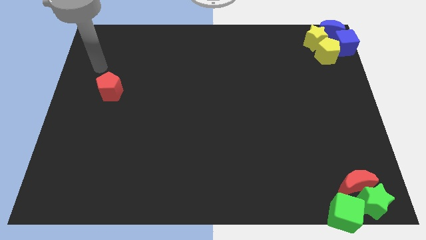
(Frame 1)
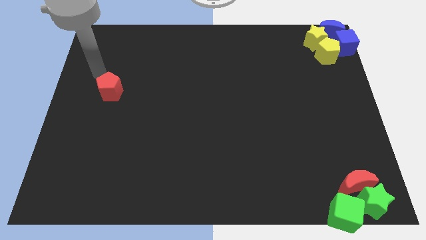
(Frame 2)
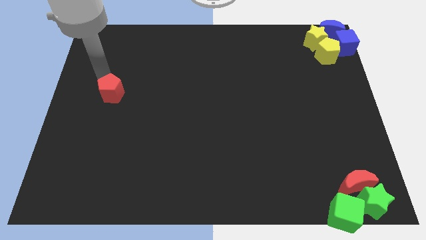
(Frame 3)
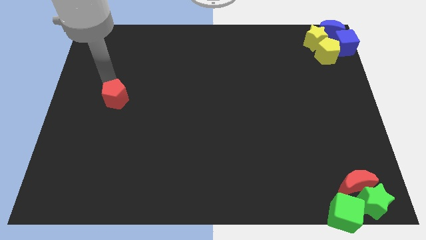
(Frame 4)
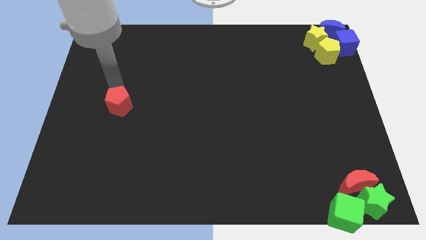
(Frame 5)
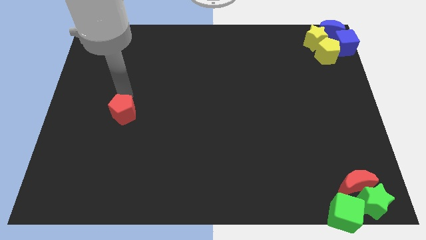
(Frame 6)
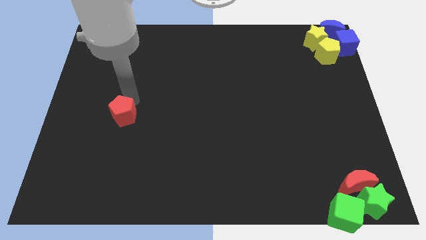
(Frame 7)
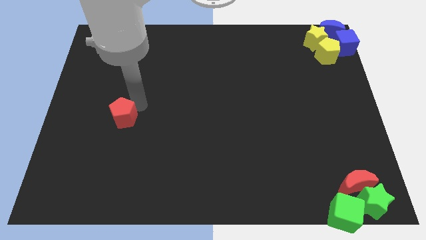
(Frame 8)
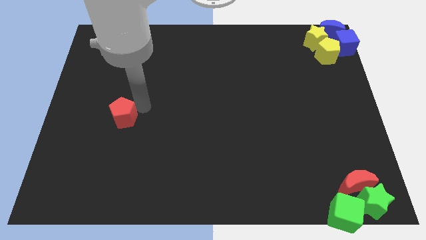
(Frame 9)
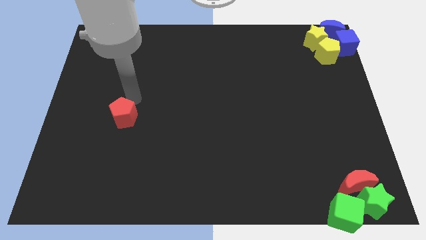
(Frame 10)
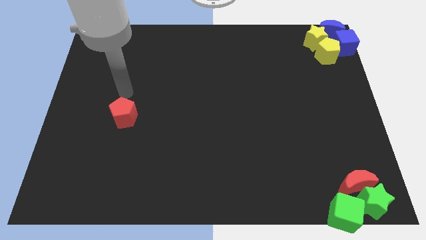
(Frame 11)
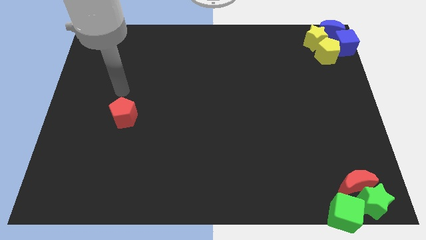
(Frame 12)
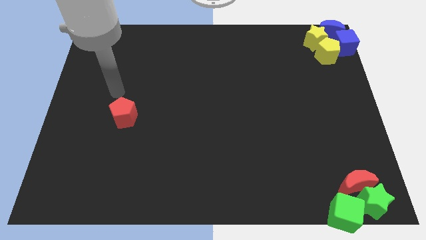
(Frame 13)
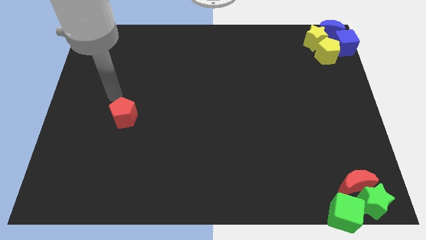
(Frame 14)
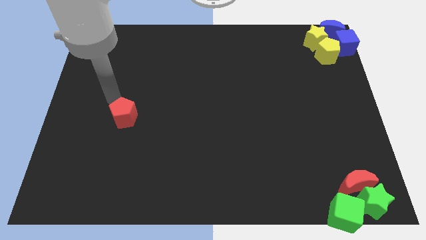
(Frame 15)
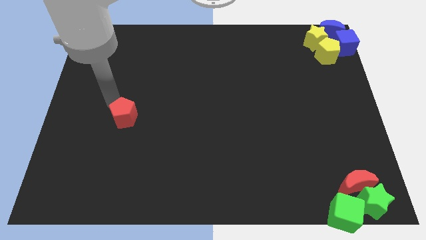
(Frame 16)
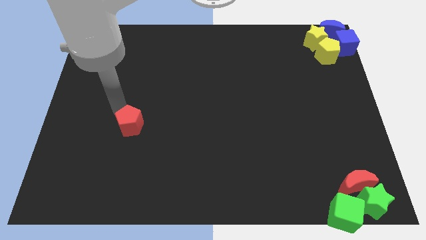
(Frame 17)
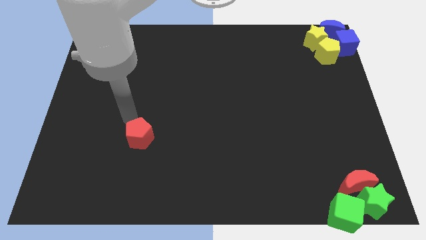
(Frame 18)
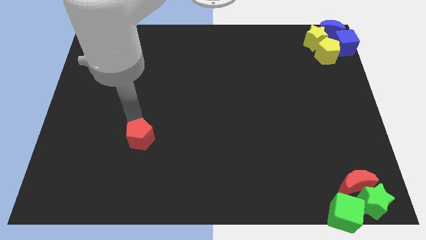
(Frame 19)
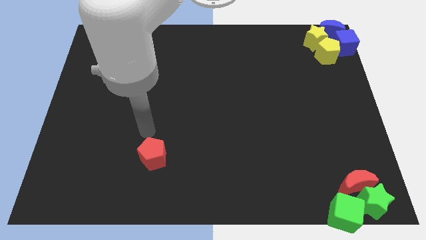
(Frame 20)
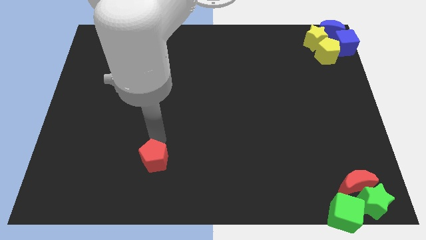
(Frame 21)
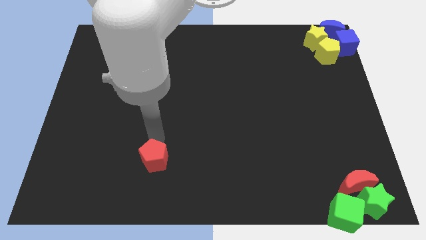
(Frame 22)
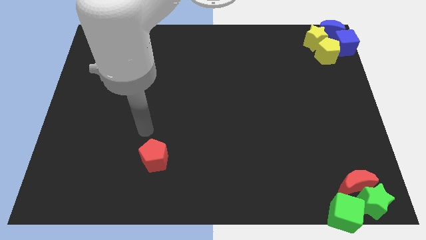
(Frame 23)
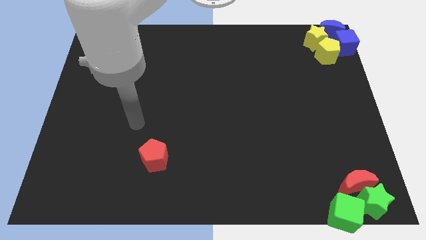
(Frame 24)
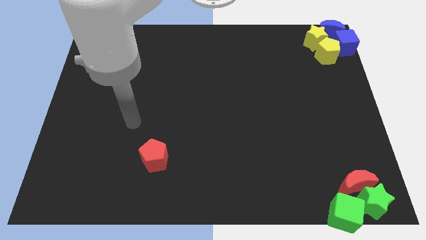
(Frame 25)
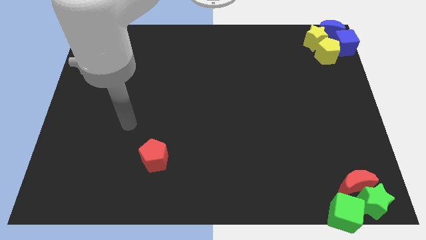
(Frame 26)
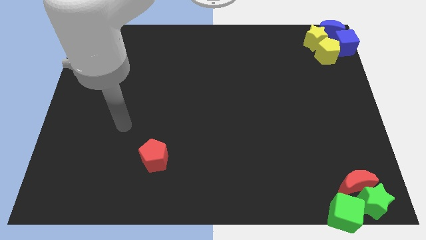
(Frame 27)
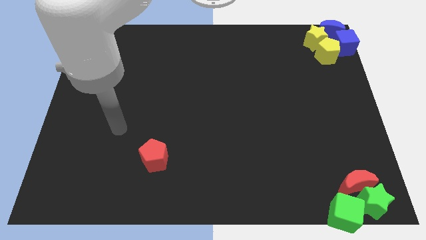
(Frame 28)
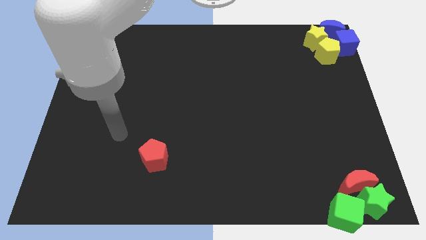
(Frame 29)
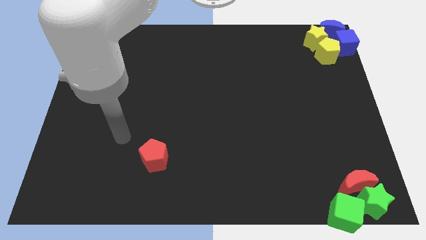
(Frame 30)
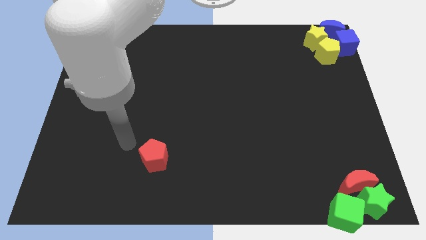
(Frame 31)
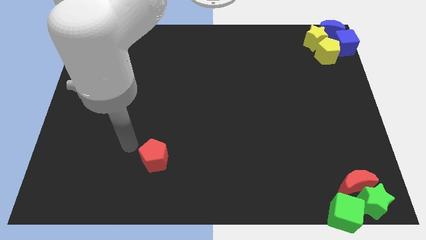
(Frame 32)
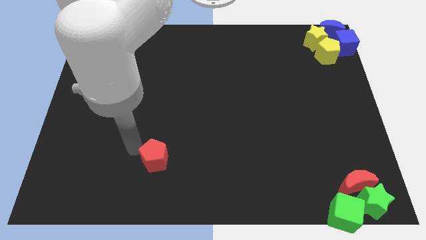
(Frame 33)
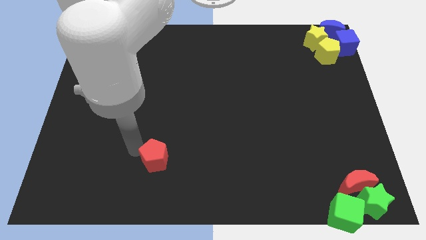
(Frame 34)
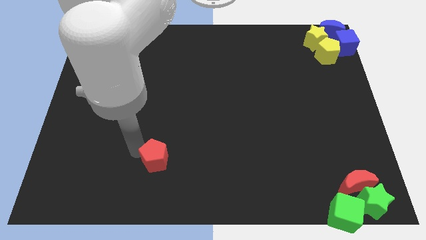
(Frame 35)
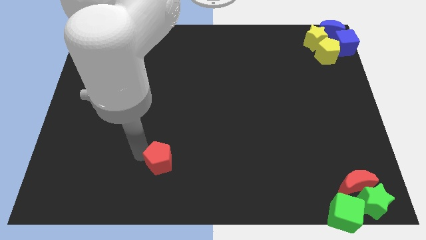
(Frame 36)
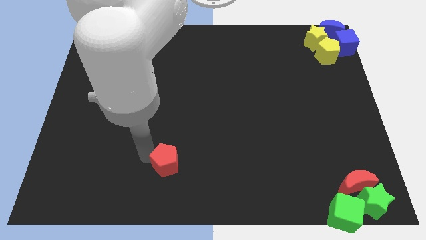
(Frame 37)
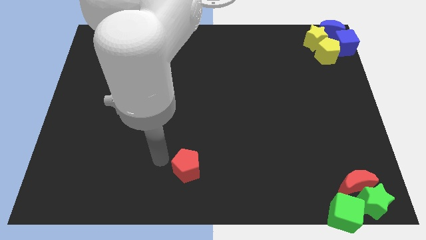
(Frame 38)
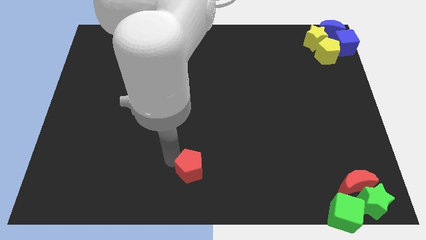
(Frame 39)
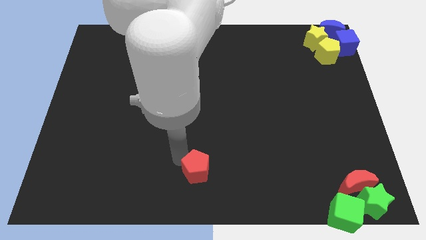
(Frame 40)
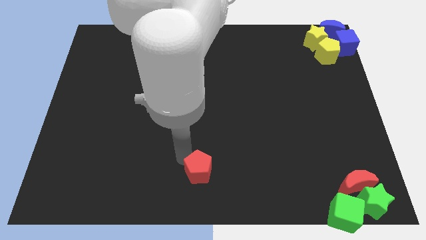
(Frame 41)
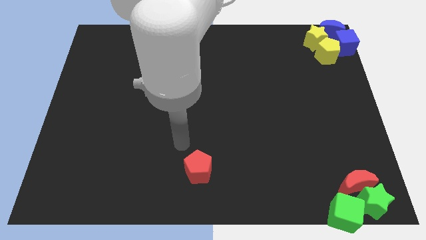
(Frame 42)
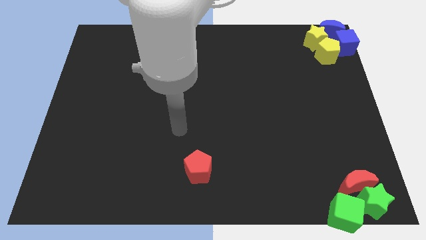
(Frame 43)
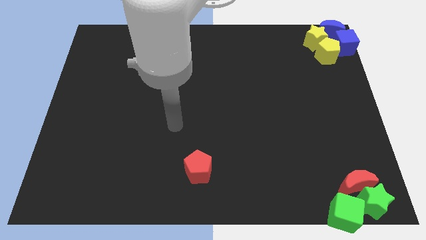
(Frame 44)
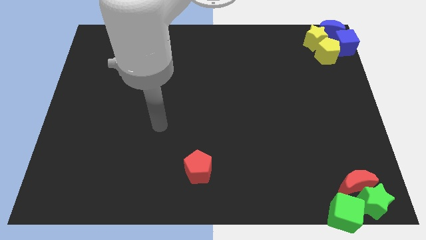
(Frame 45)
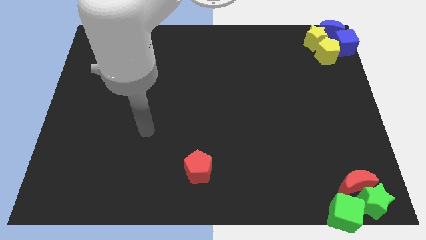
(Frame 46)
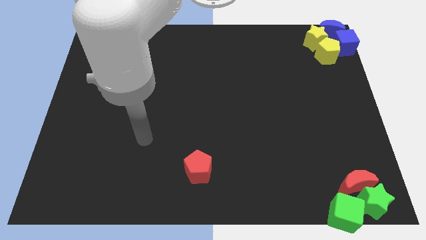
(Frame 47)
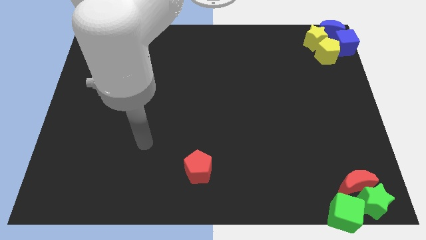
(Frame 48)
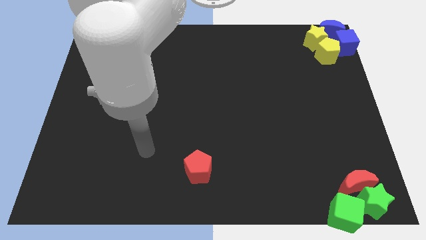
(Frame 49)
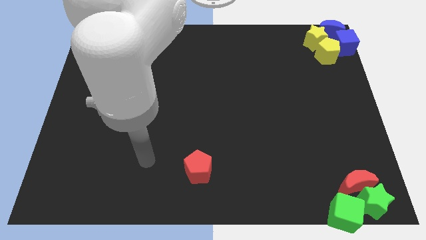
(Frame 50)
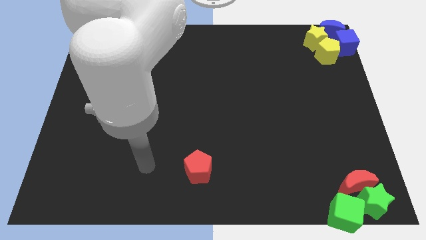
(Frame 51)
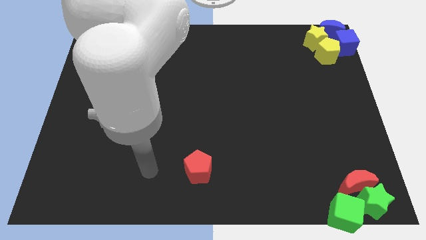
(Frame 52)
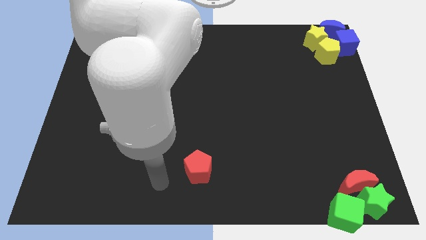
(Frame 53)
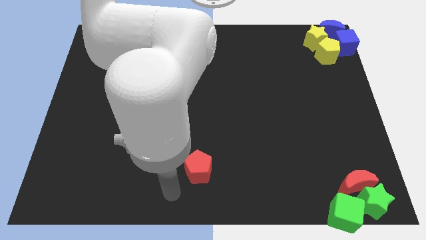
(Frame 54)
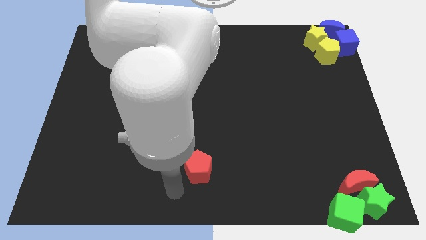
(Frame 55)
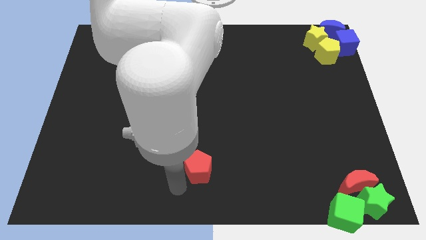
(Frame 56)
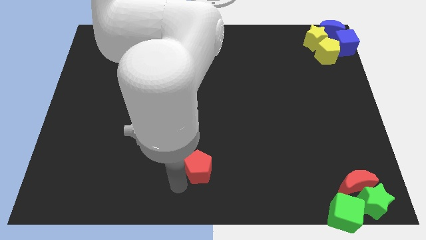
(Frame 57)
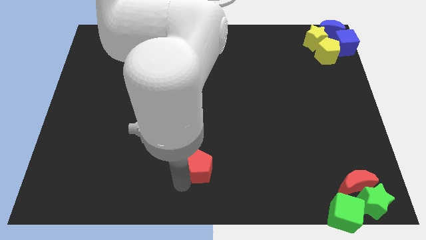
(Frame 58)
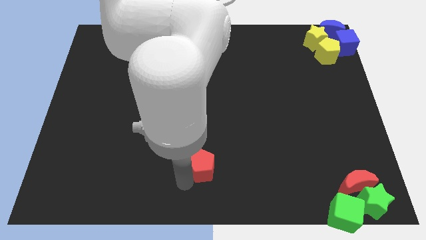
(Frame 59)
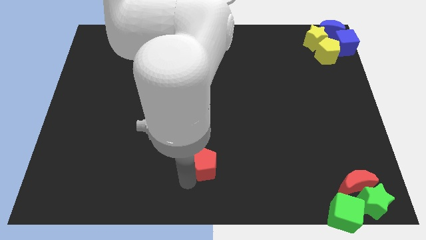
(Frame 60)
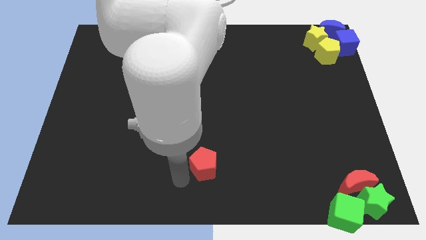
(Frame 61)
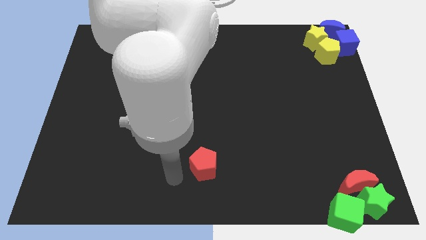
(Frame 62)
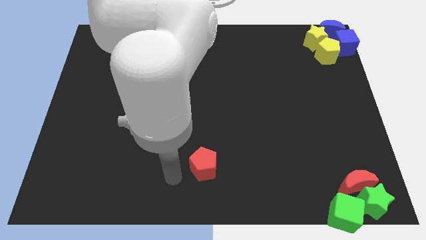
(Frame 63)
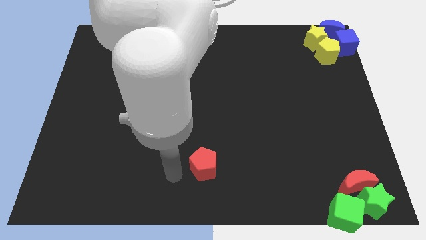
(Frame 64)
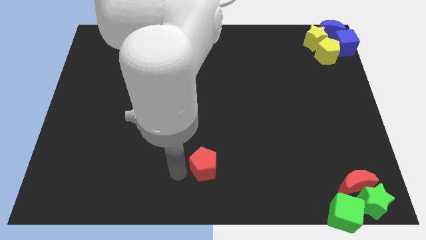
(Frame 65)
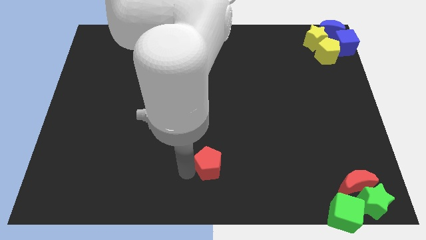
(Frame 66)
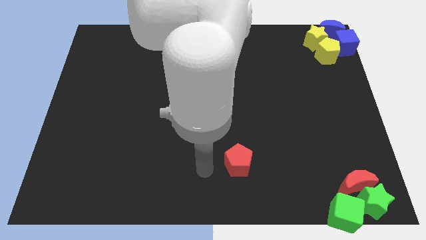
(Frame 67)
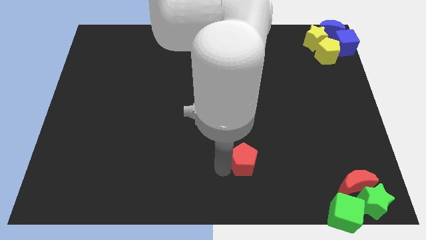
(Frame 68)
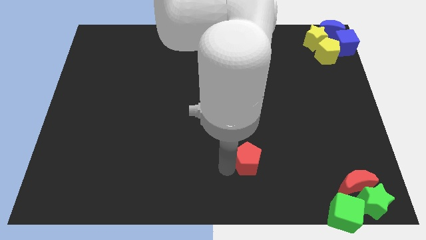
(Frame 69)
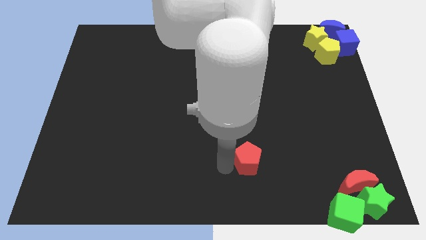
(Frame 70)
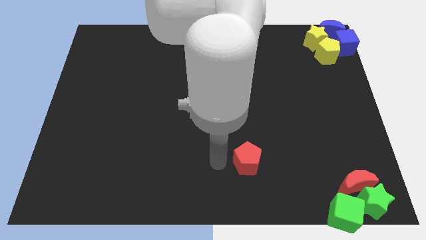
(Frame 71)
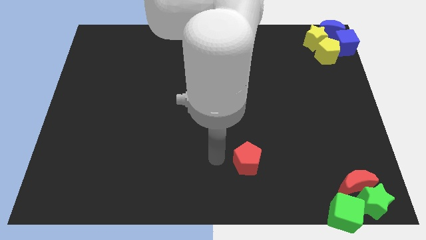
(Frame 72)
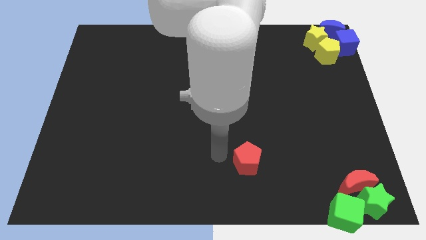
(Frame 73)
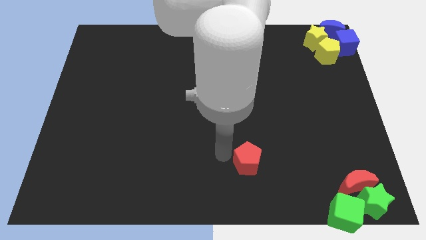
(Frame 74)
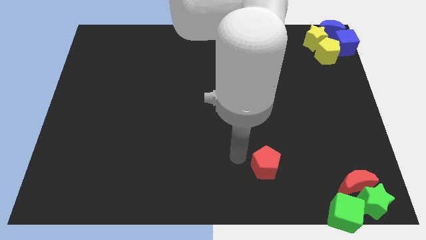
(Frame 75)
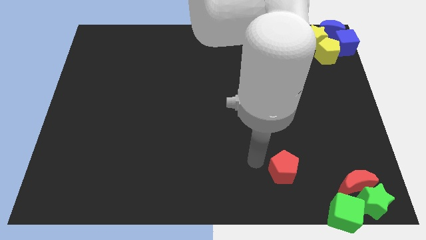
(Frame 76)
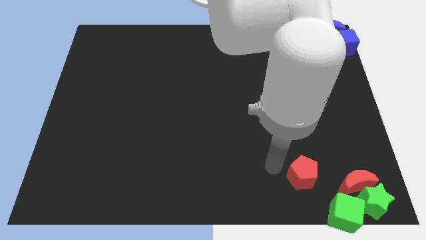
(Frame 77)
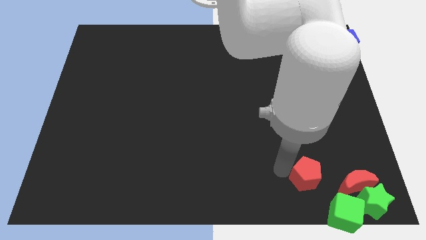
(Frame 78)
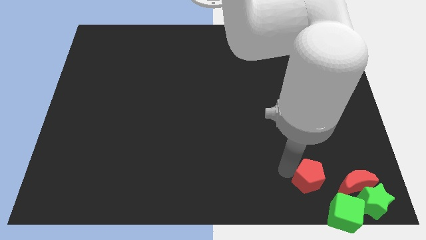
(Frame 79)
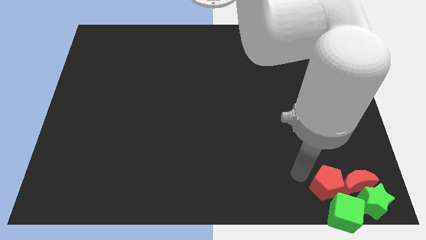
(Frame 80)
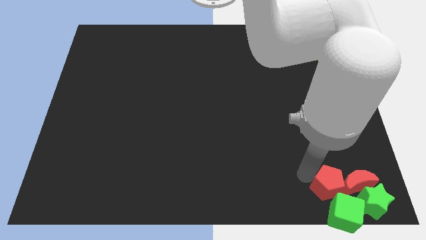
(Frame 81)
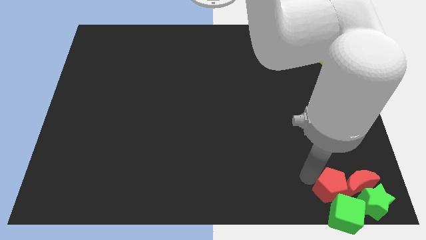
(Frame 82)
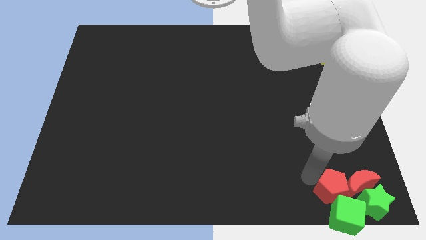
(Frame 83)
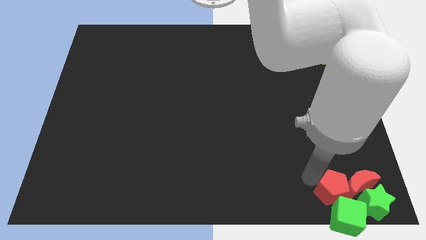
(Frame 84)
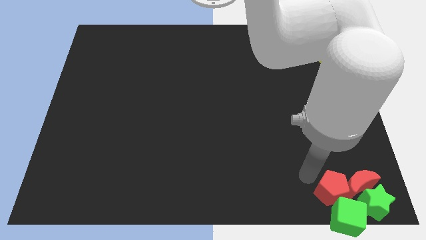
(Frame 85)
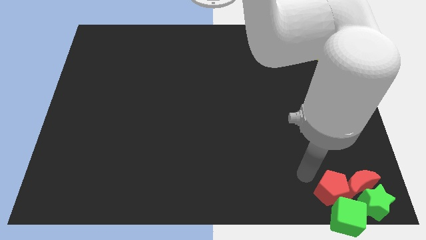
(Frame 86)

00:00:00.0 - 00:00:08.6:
push the red pentagon into the green cube

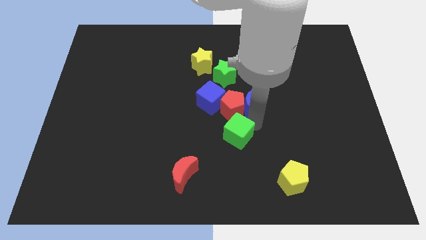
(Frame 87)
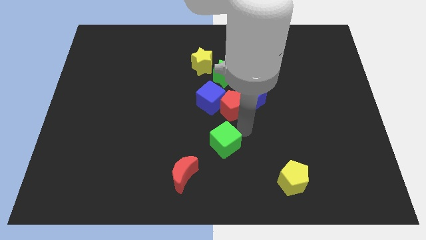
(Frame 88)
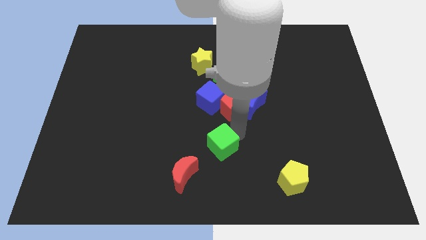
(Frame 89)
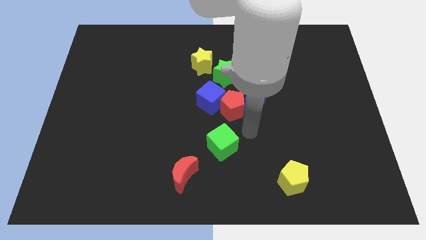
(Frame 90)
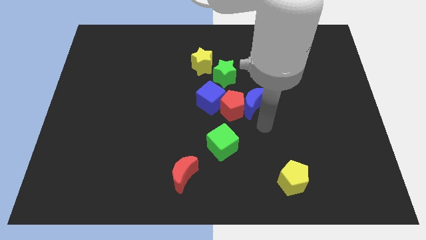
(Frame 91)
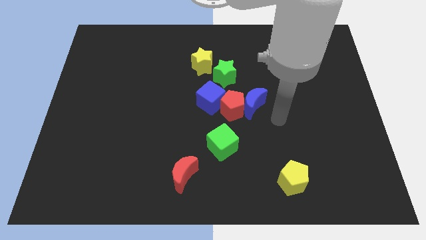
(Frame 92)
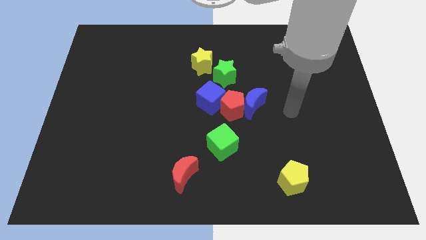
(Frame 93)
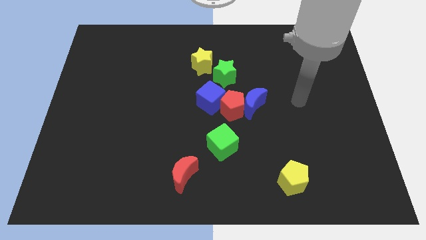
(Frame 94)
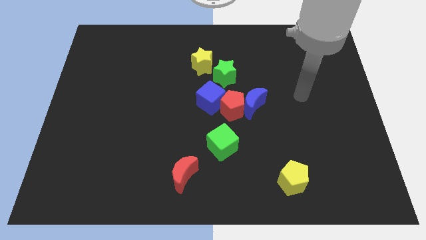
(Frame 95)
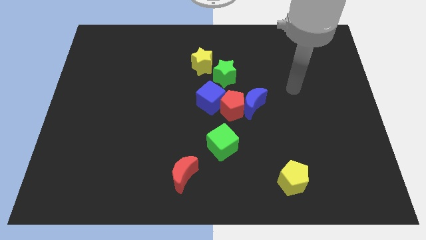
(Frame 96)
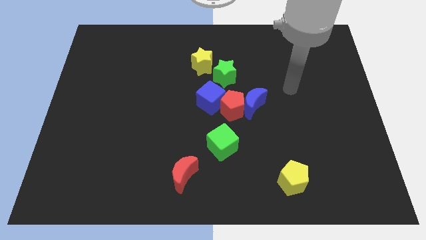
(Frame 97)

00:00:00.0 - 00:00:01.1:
slide green cube towards red moon
